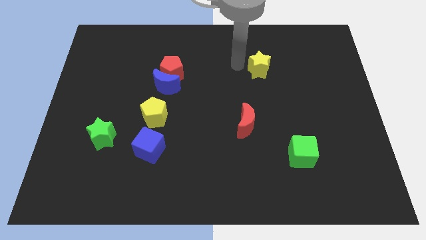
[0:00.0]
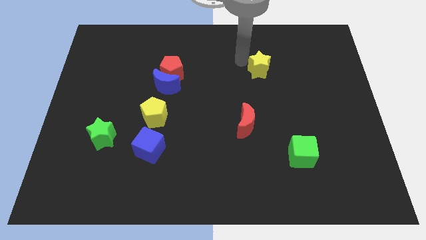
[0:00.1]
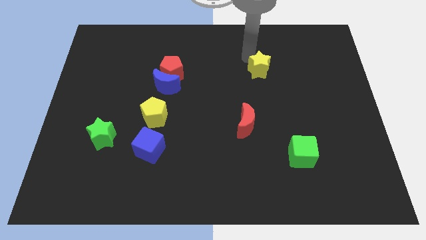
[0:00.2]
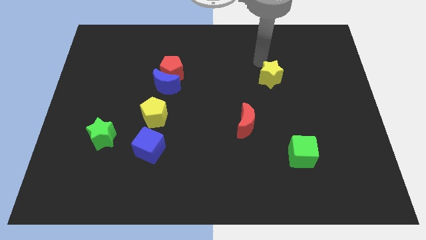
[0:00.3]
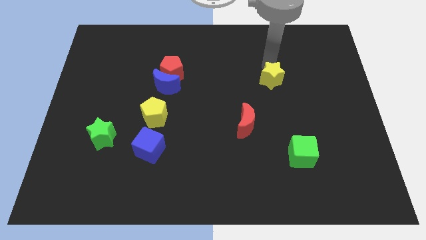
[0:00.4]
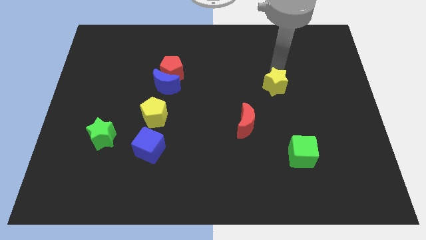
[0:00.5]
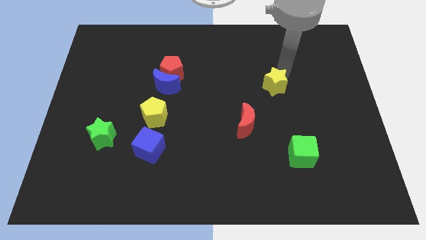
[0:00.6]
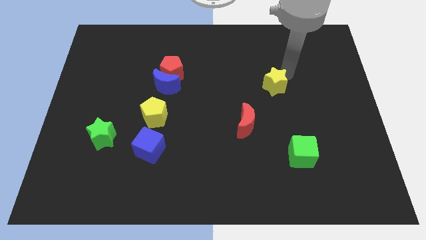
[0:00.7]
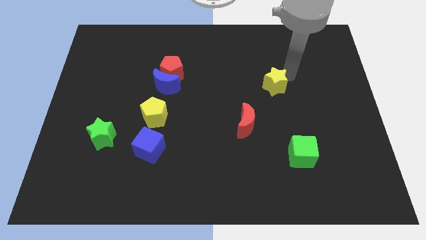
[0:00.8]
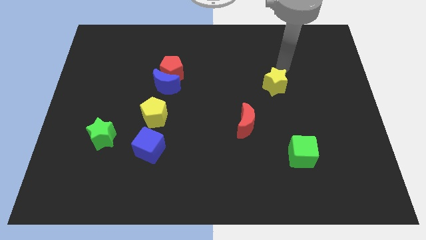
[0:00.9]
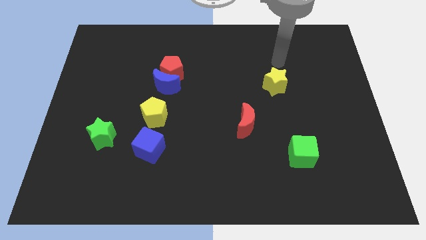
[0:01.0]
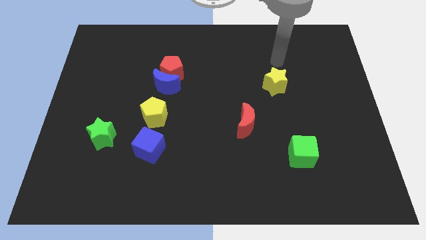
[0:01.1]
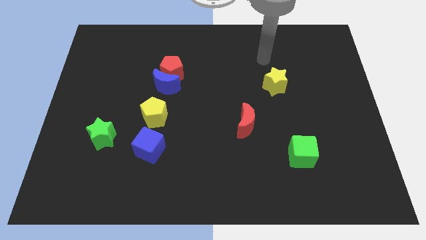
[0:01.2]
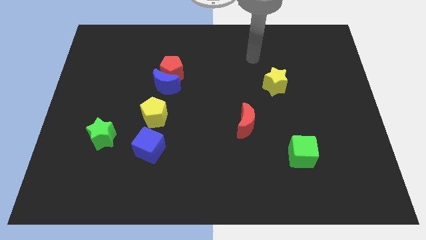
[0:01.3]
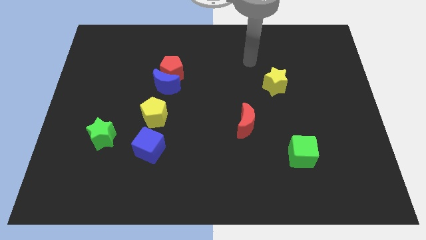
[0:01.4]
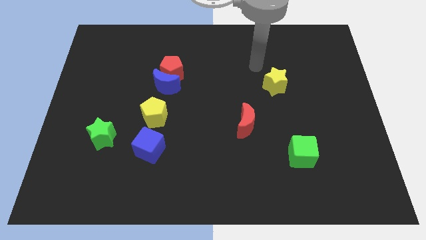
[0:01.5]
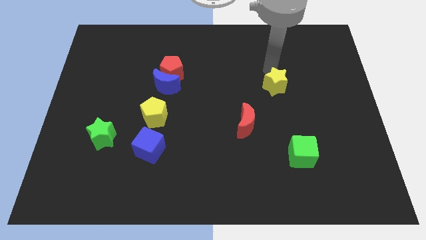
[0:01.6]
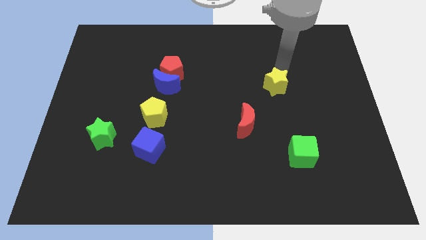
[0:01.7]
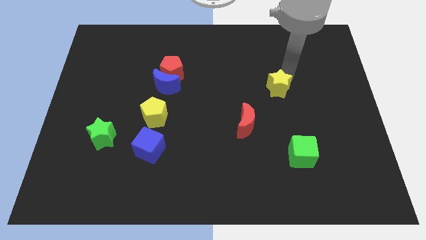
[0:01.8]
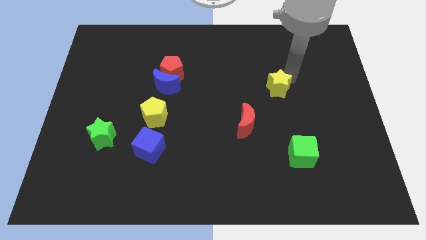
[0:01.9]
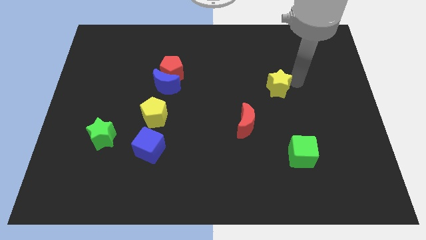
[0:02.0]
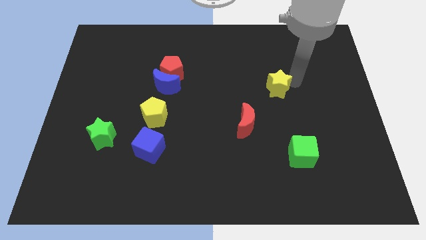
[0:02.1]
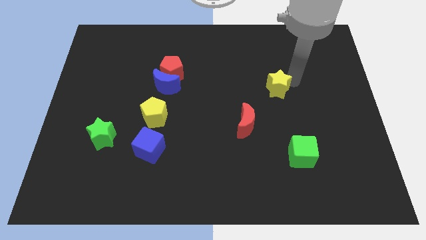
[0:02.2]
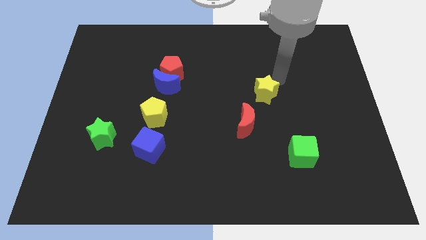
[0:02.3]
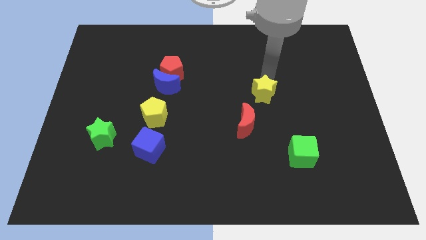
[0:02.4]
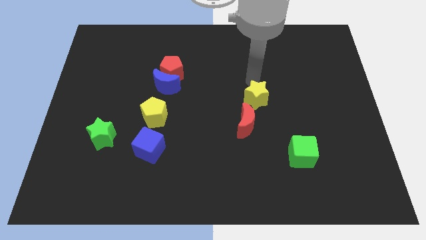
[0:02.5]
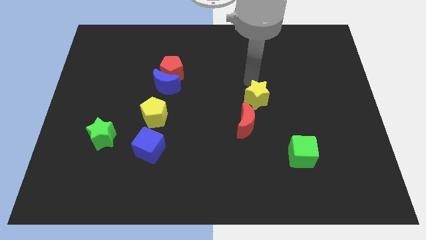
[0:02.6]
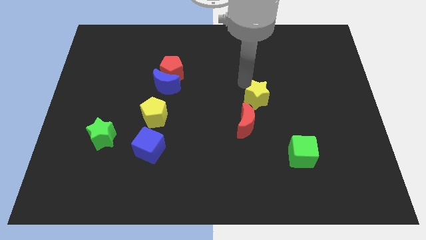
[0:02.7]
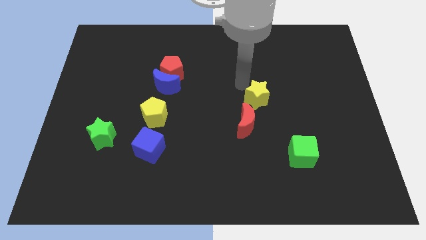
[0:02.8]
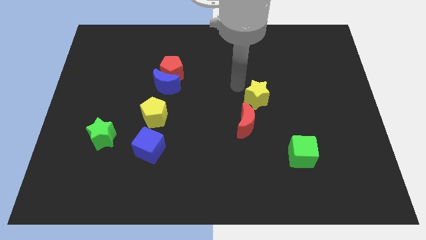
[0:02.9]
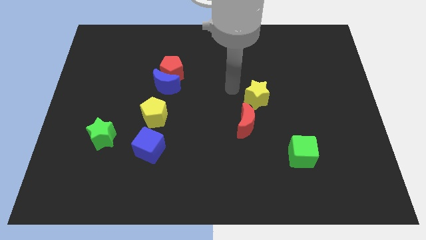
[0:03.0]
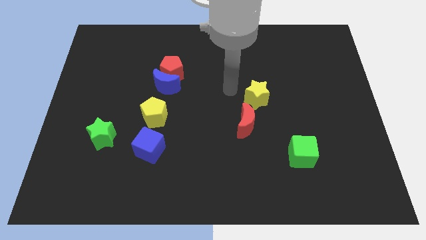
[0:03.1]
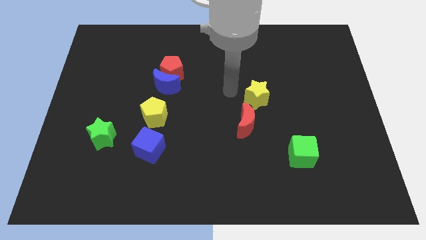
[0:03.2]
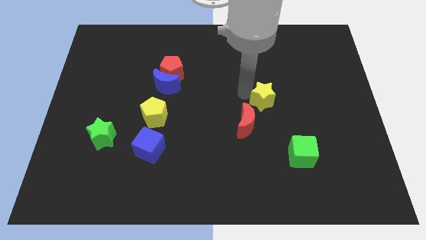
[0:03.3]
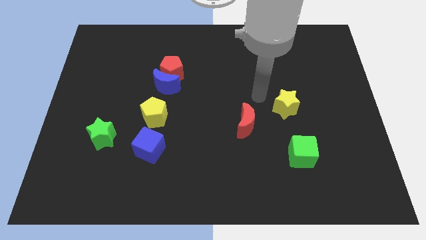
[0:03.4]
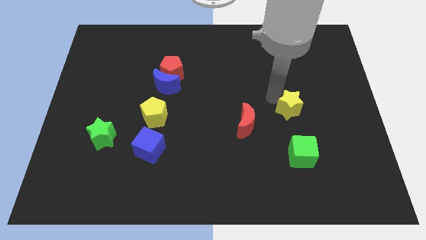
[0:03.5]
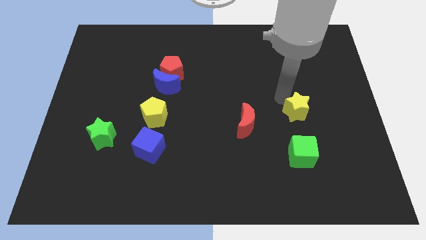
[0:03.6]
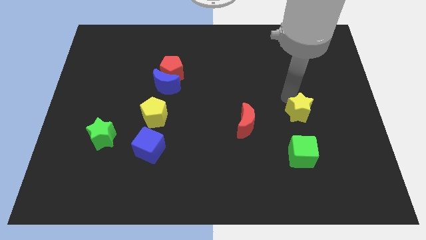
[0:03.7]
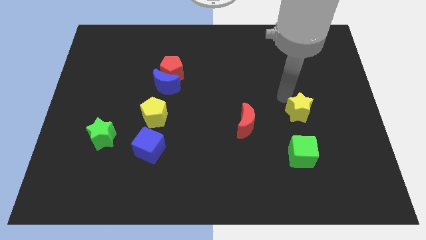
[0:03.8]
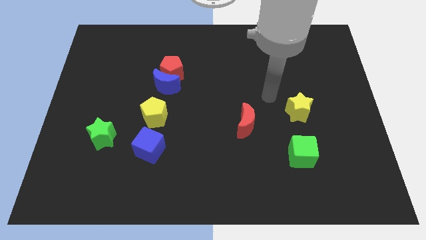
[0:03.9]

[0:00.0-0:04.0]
move the yellow star to the top of the green cube

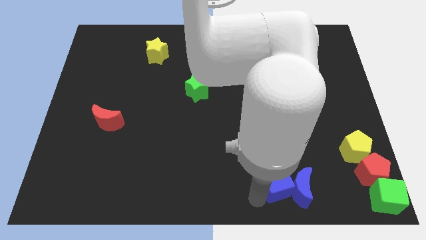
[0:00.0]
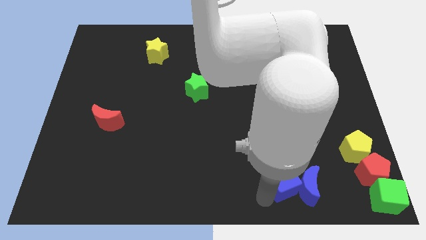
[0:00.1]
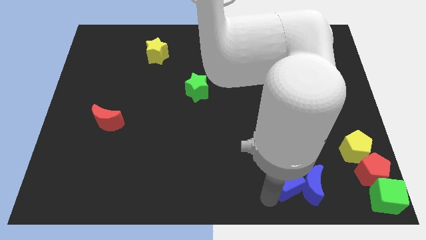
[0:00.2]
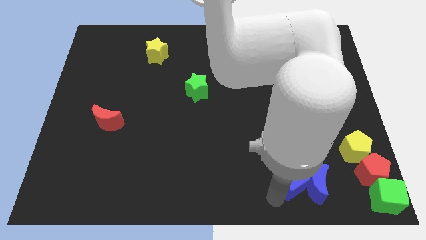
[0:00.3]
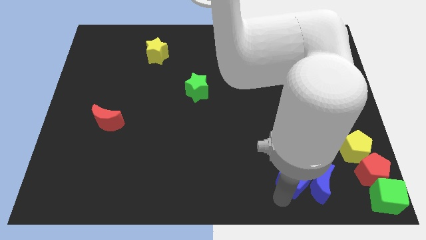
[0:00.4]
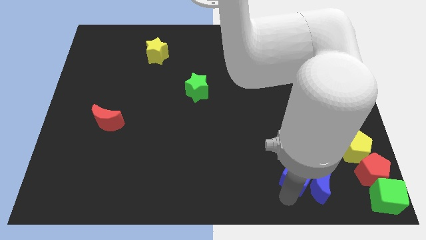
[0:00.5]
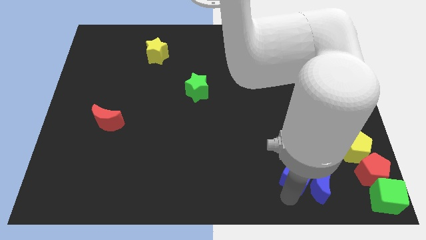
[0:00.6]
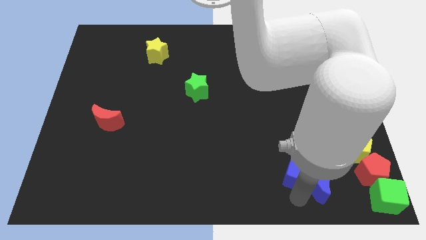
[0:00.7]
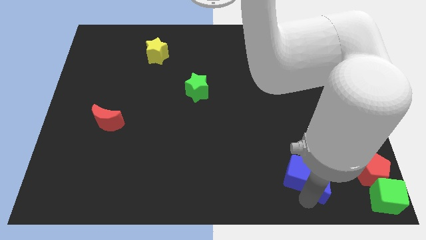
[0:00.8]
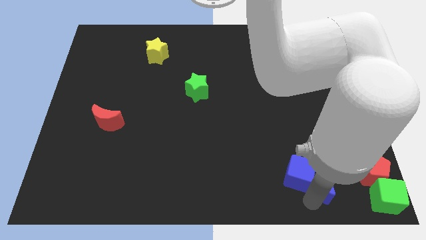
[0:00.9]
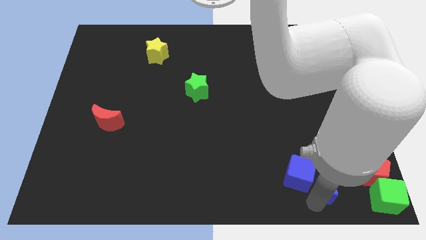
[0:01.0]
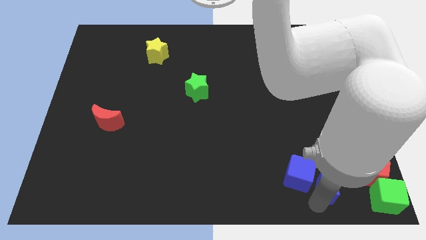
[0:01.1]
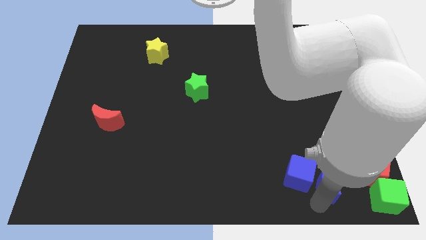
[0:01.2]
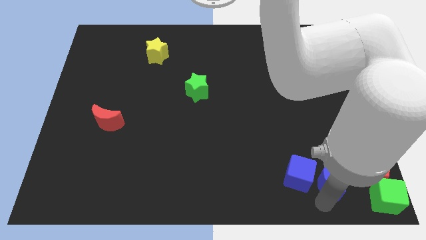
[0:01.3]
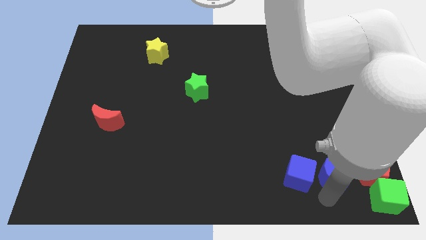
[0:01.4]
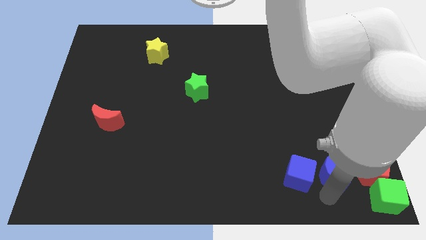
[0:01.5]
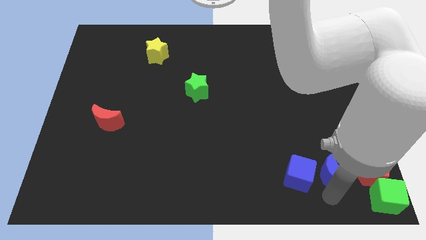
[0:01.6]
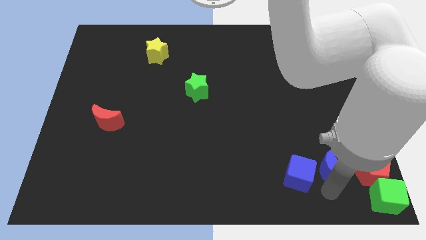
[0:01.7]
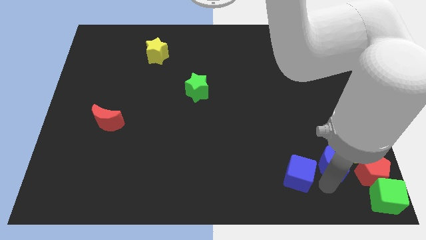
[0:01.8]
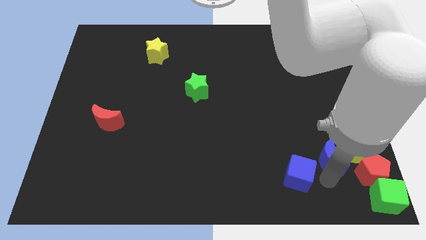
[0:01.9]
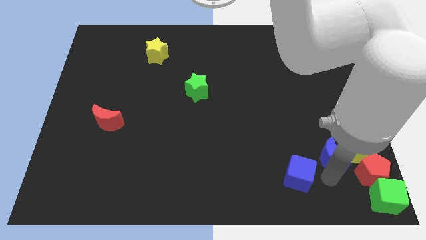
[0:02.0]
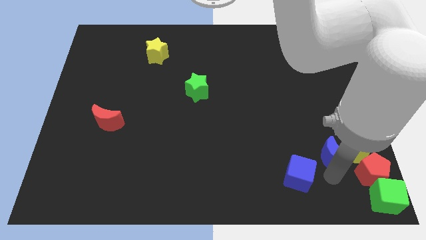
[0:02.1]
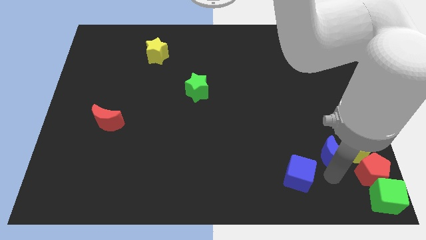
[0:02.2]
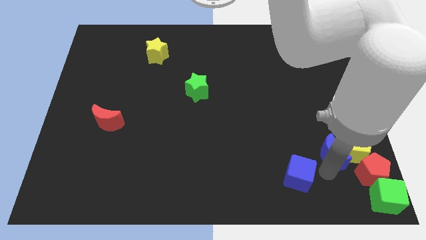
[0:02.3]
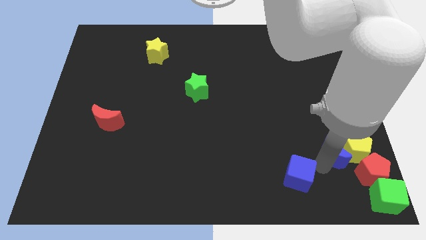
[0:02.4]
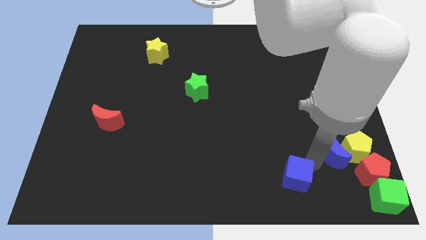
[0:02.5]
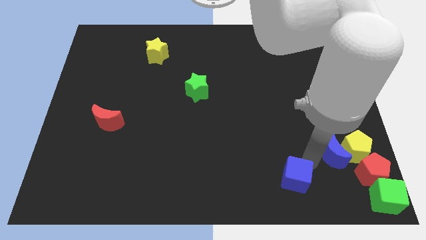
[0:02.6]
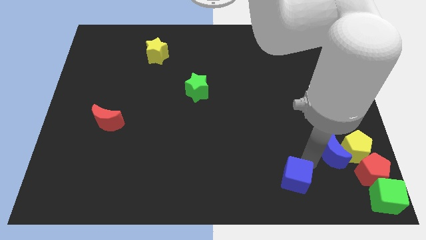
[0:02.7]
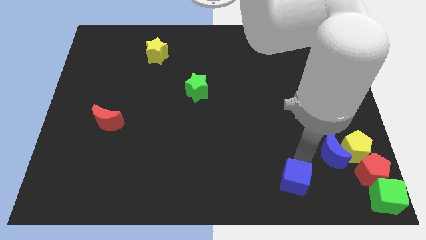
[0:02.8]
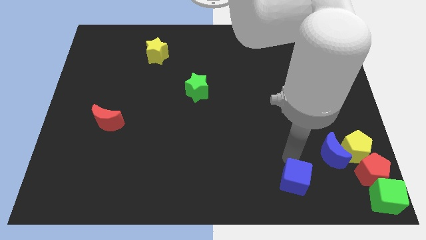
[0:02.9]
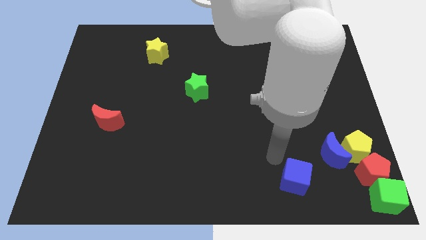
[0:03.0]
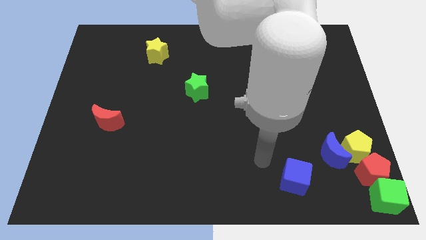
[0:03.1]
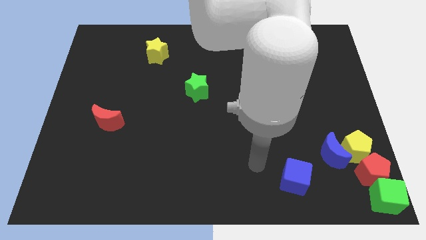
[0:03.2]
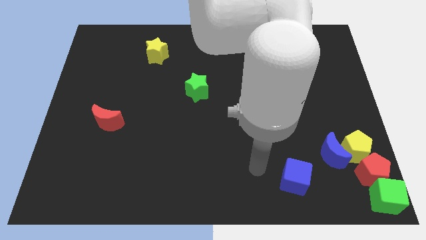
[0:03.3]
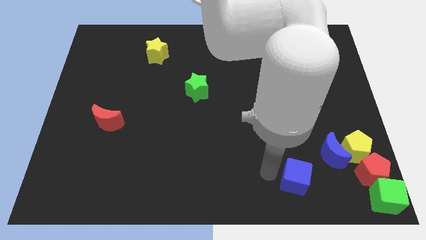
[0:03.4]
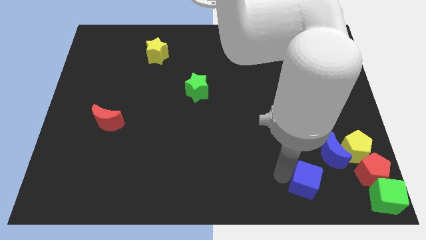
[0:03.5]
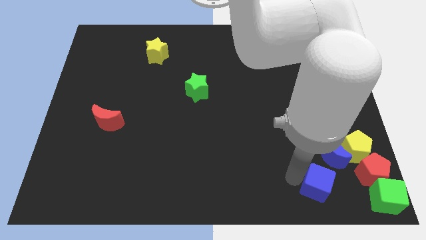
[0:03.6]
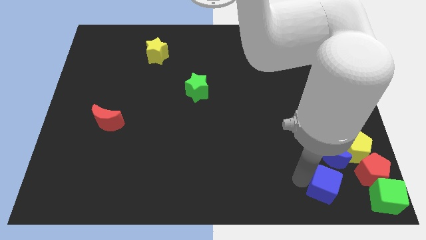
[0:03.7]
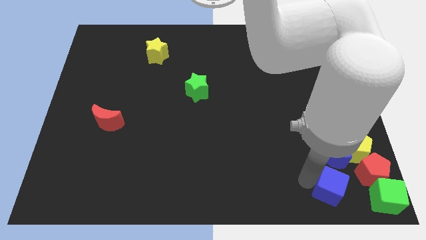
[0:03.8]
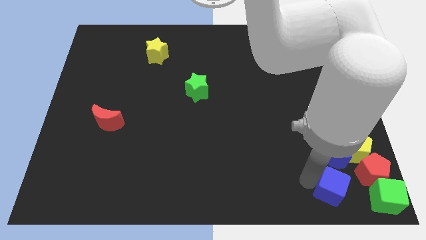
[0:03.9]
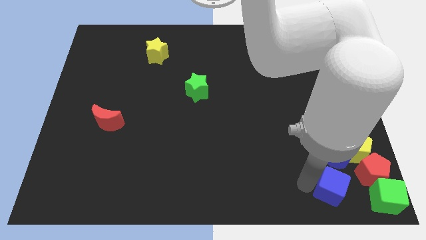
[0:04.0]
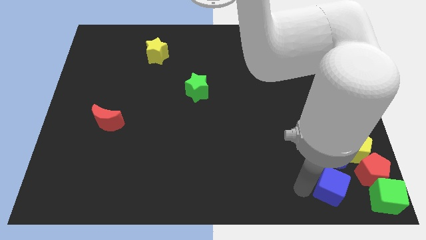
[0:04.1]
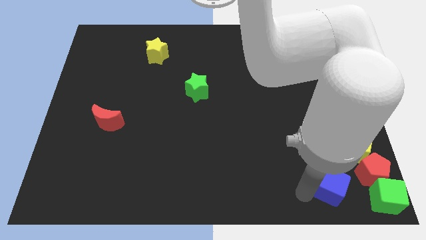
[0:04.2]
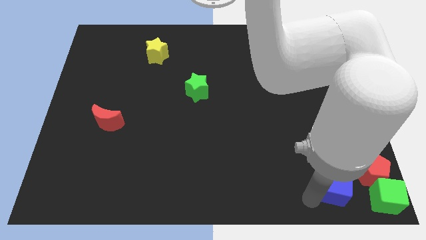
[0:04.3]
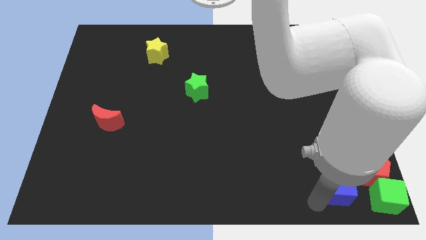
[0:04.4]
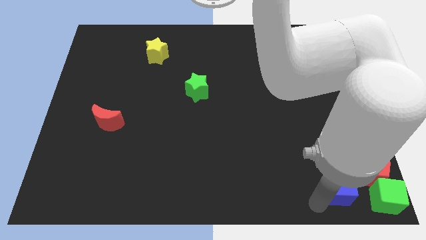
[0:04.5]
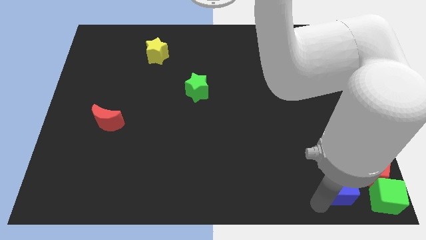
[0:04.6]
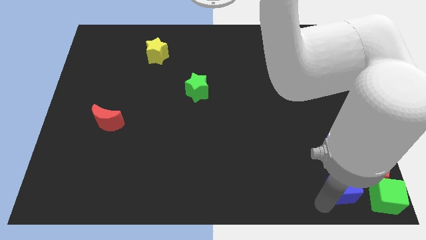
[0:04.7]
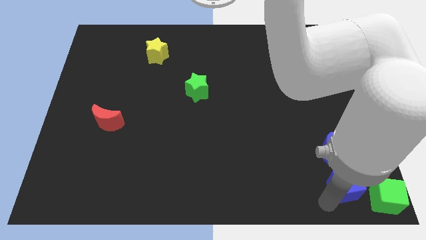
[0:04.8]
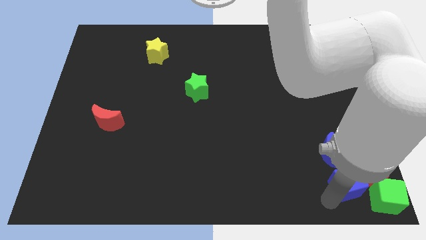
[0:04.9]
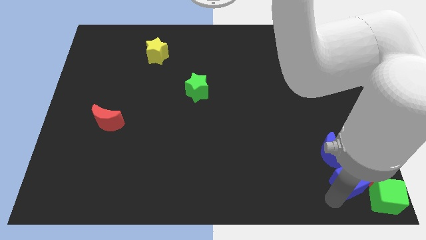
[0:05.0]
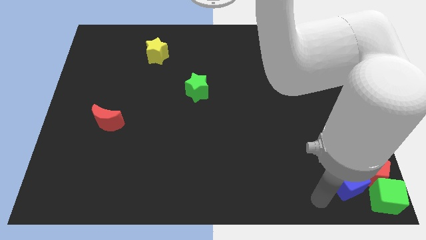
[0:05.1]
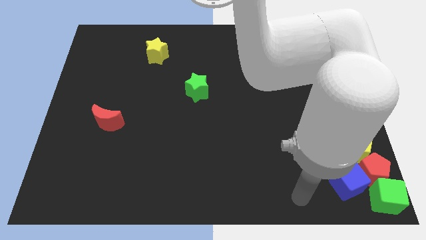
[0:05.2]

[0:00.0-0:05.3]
slide the blue moon parallel to the left of the yellow pentagon
